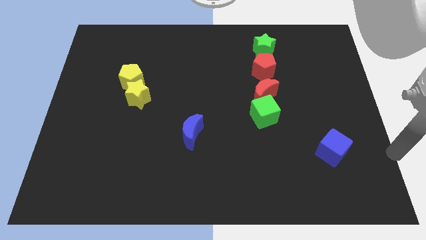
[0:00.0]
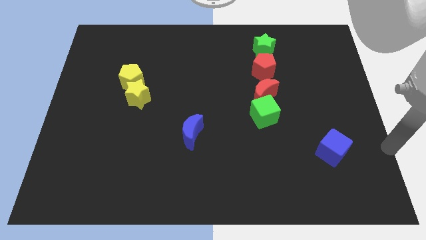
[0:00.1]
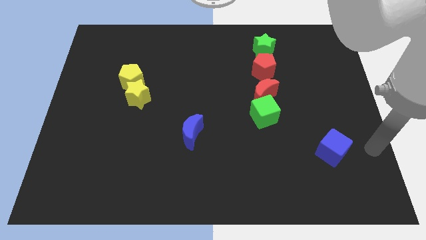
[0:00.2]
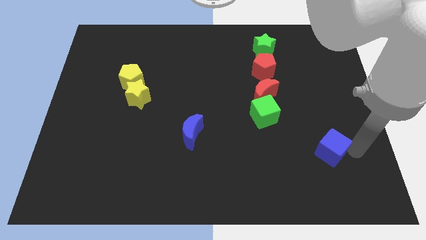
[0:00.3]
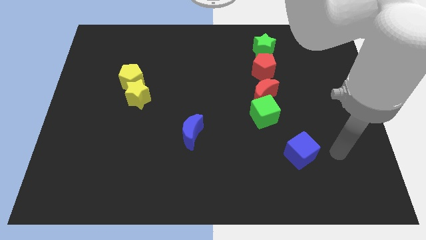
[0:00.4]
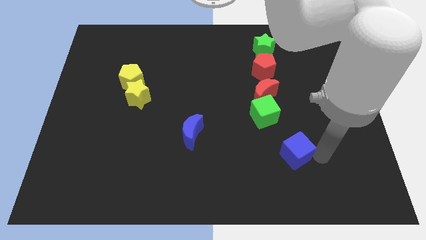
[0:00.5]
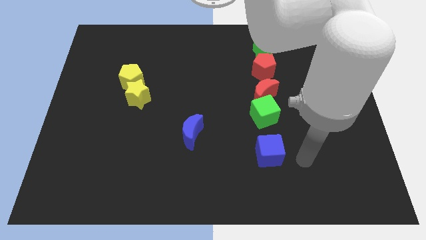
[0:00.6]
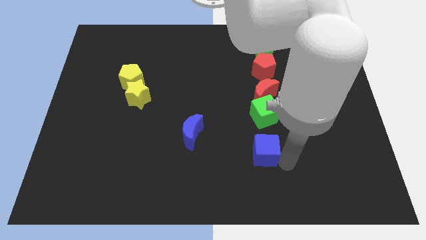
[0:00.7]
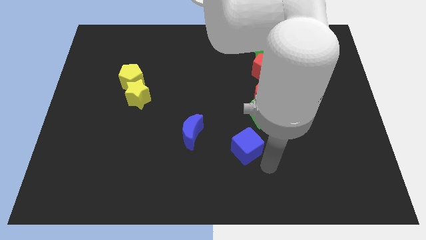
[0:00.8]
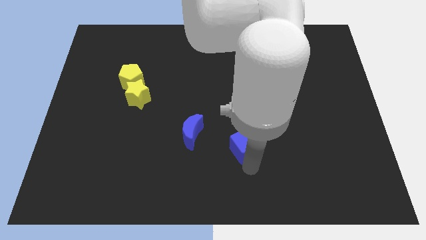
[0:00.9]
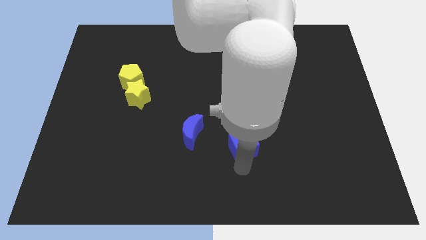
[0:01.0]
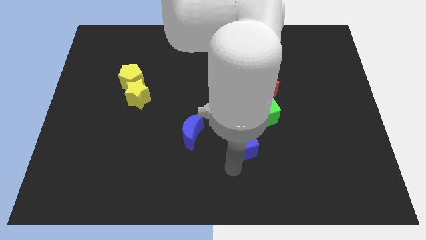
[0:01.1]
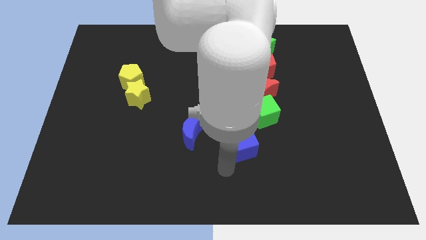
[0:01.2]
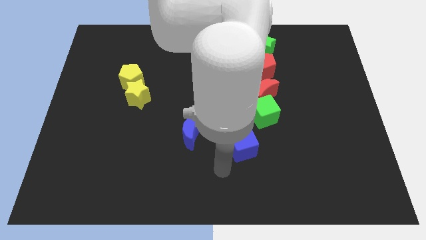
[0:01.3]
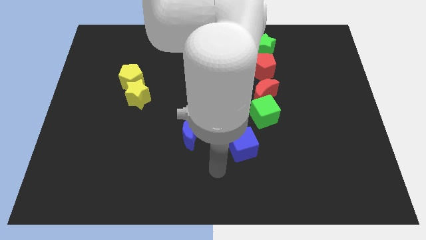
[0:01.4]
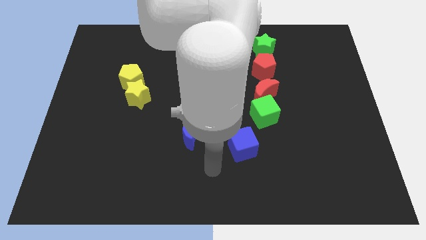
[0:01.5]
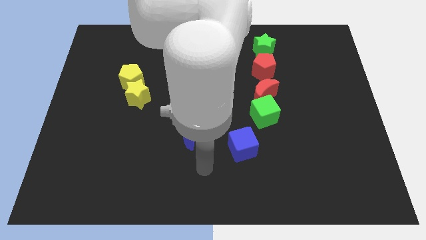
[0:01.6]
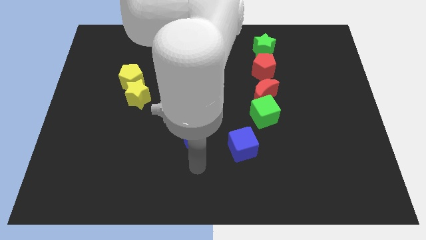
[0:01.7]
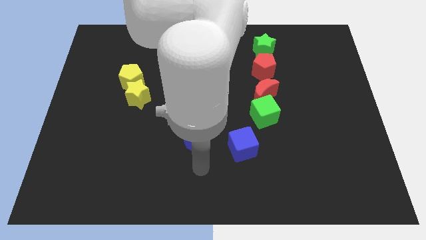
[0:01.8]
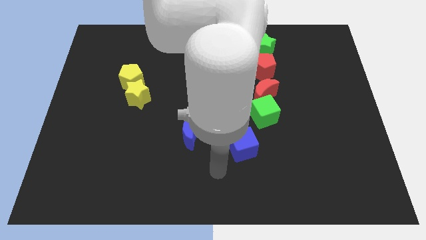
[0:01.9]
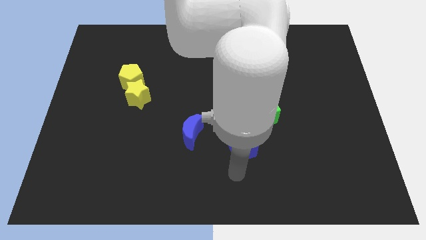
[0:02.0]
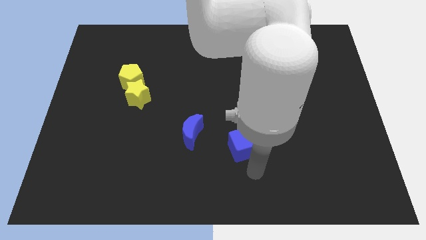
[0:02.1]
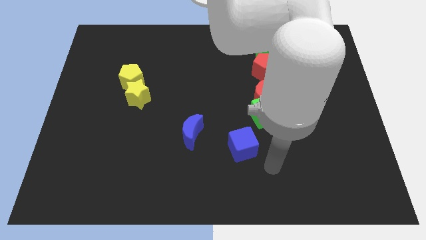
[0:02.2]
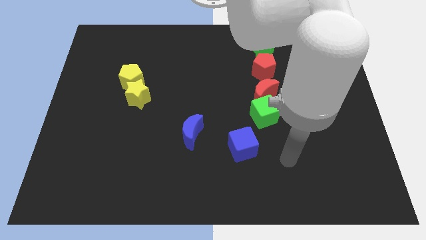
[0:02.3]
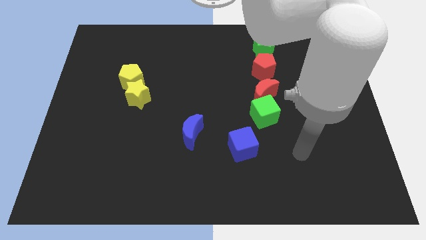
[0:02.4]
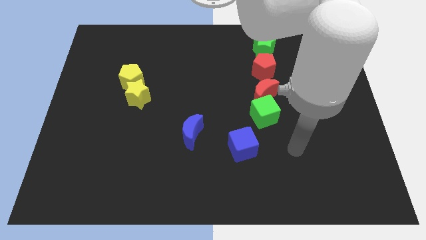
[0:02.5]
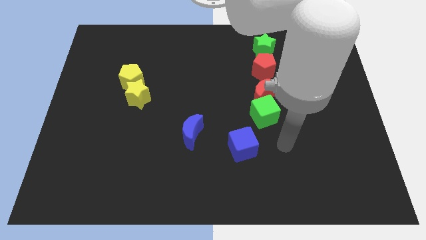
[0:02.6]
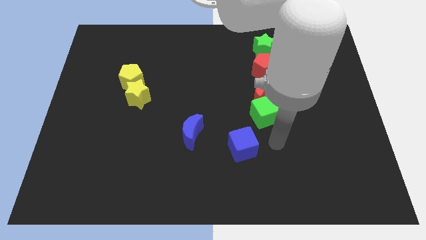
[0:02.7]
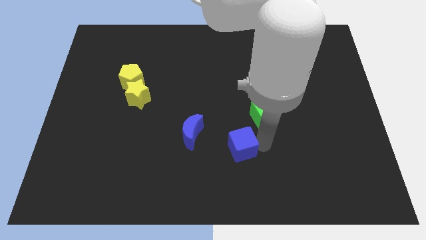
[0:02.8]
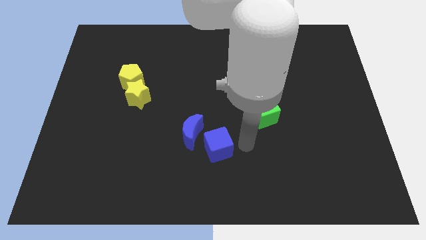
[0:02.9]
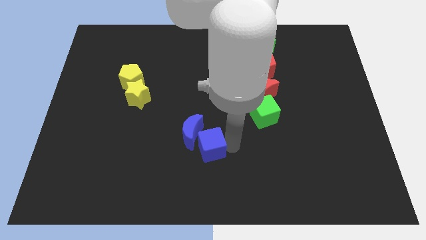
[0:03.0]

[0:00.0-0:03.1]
drag the blue cube into the blue moon

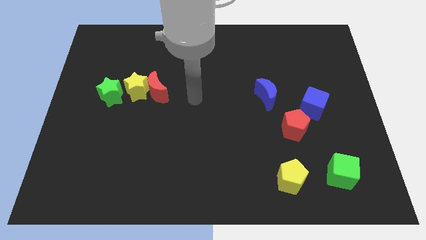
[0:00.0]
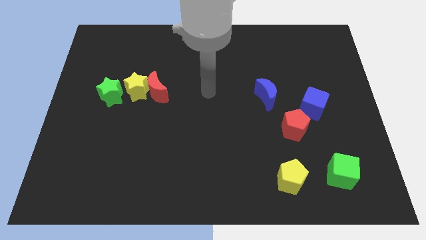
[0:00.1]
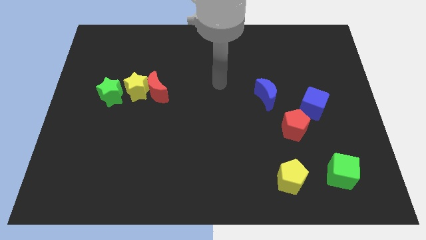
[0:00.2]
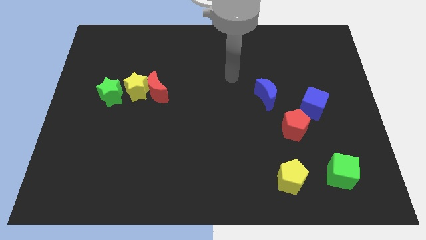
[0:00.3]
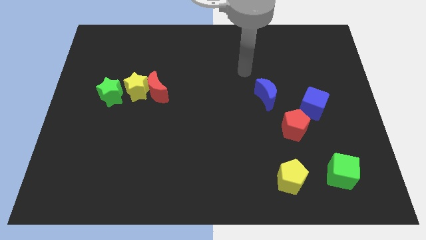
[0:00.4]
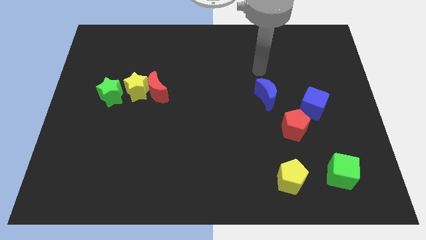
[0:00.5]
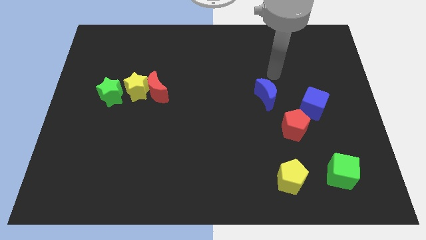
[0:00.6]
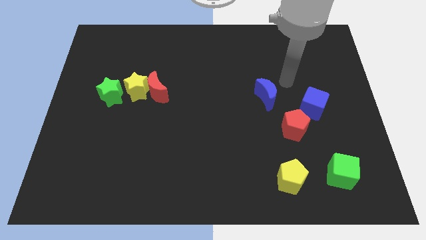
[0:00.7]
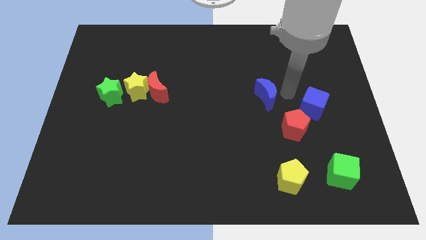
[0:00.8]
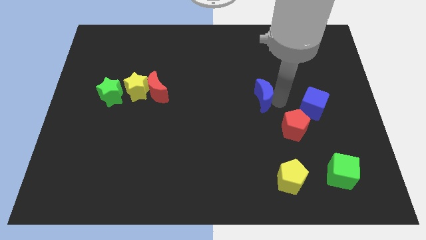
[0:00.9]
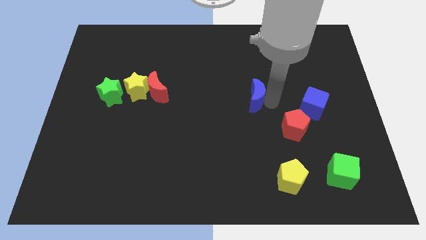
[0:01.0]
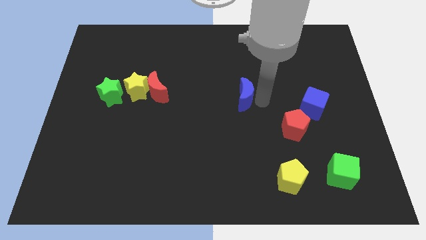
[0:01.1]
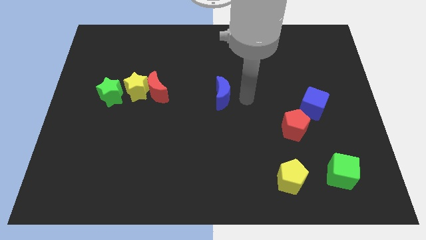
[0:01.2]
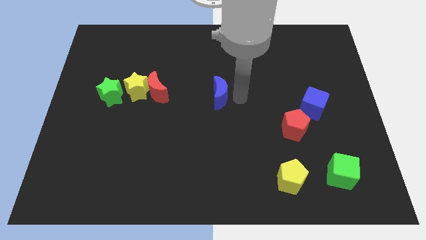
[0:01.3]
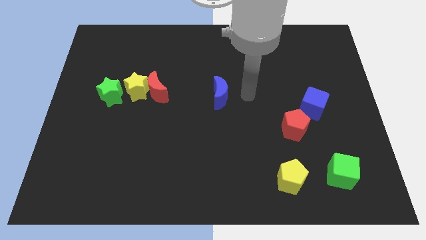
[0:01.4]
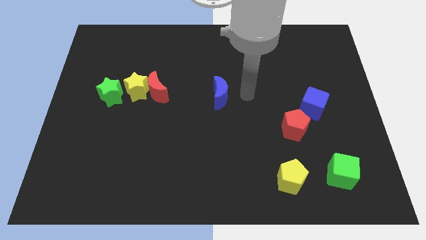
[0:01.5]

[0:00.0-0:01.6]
move the blue moon towards the red moon

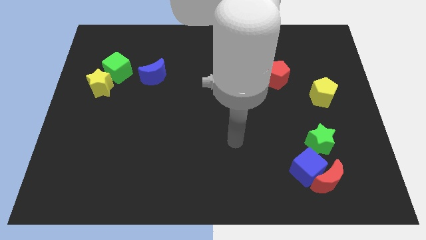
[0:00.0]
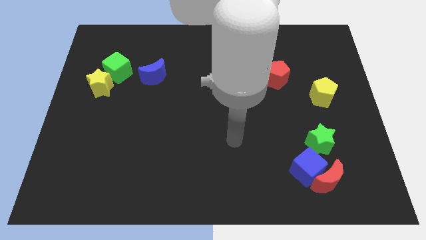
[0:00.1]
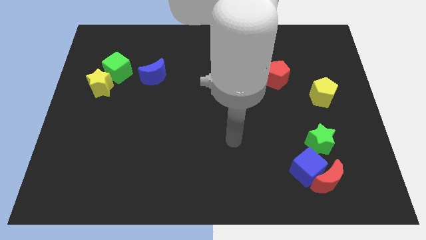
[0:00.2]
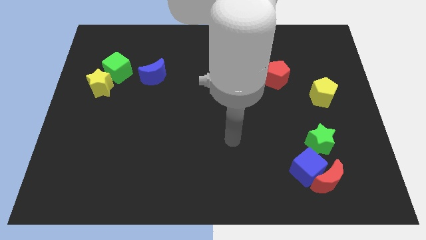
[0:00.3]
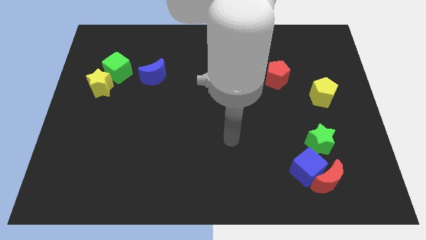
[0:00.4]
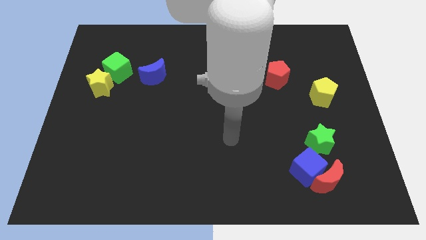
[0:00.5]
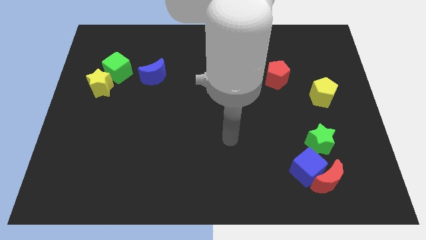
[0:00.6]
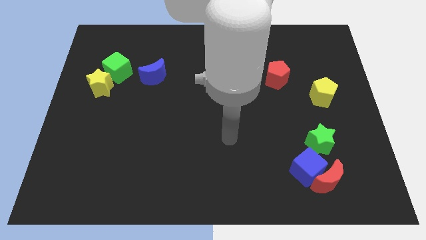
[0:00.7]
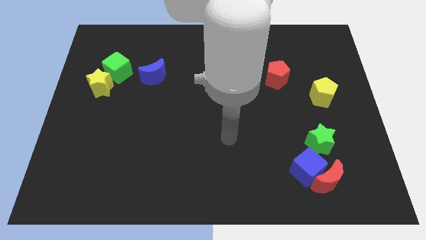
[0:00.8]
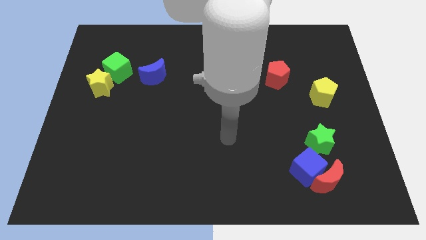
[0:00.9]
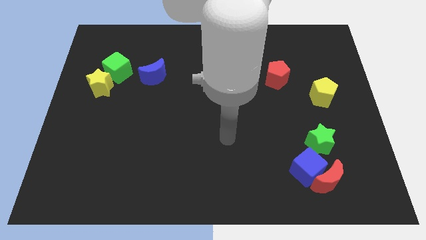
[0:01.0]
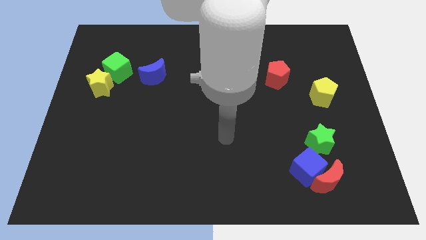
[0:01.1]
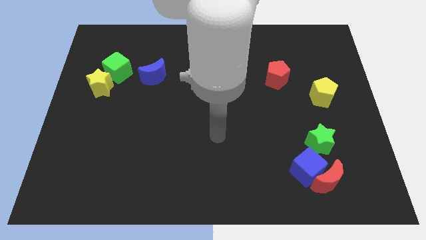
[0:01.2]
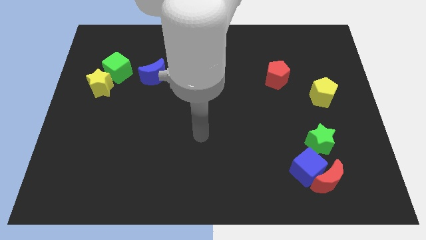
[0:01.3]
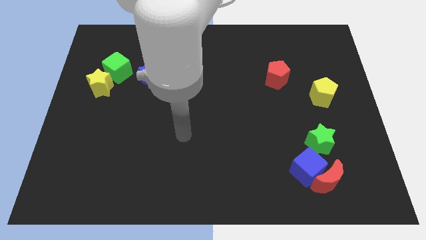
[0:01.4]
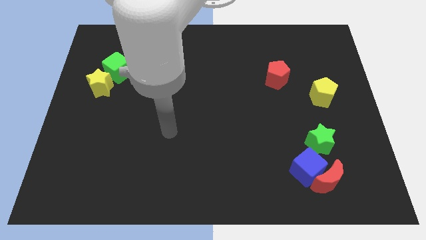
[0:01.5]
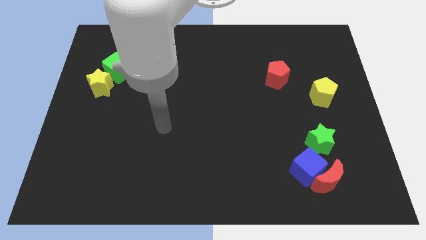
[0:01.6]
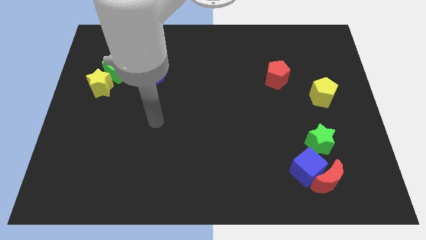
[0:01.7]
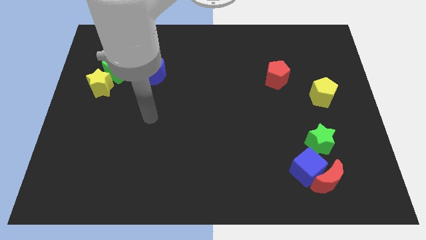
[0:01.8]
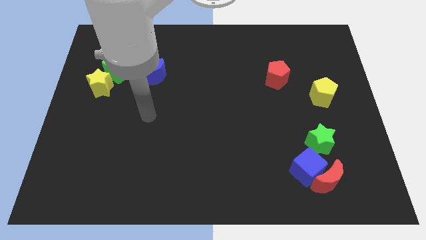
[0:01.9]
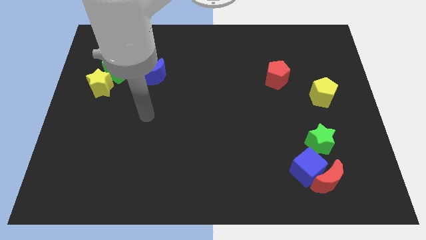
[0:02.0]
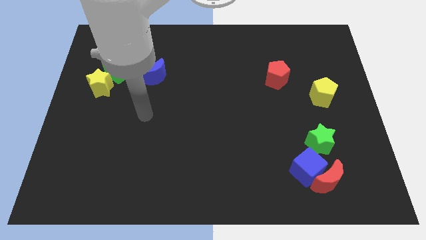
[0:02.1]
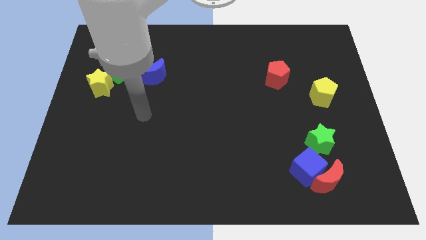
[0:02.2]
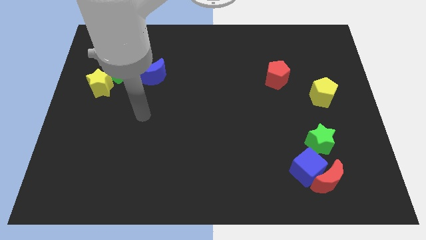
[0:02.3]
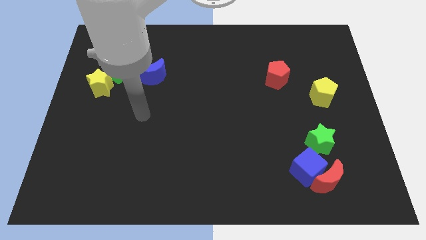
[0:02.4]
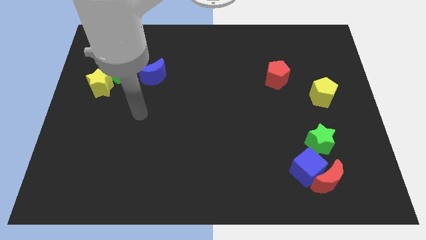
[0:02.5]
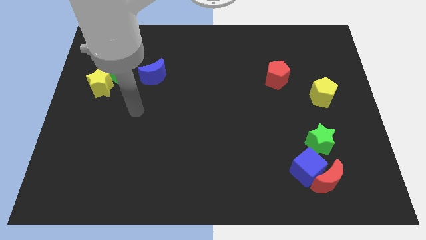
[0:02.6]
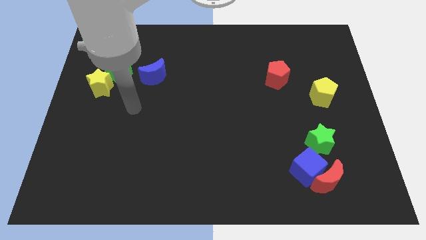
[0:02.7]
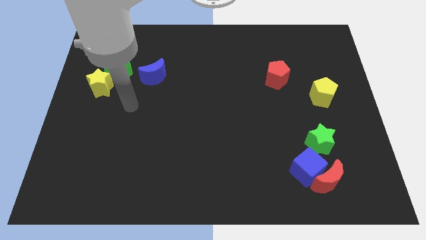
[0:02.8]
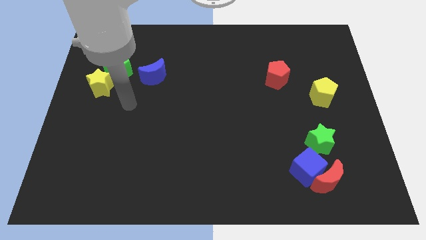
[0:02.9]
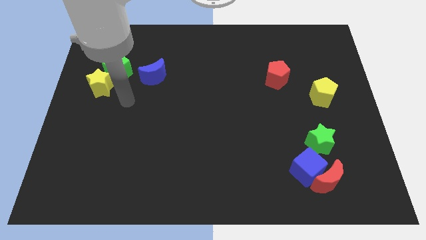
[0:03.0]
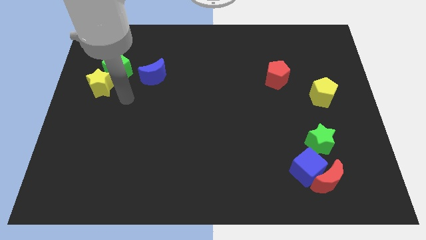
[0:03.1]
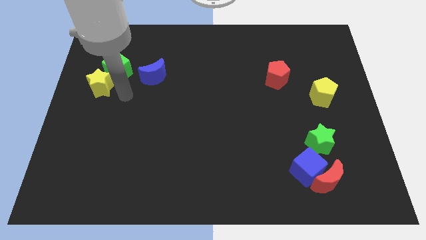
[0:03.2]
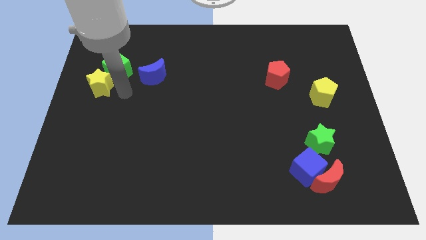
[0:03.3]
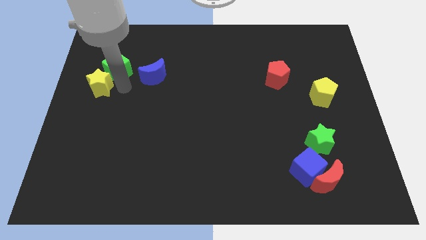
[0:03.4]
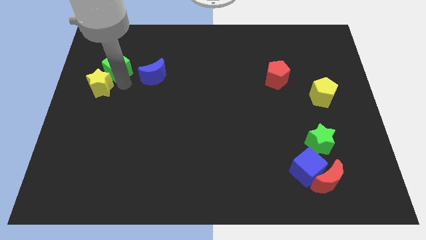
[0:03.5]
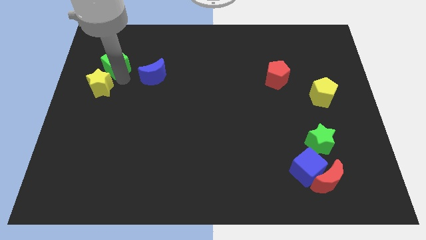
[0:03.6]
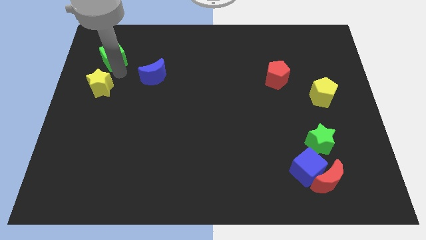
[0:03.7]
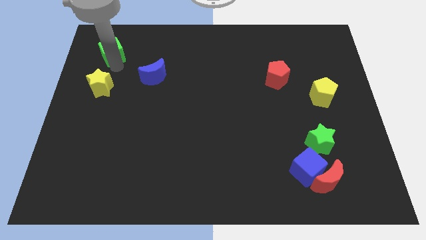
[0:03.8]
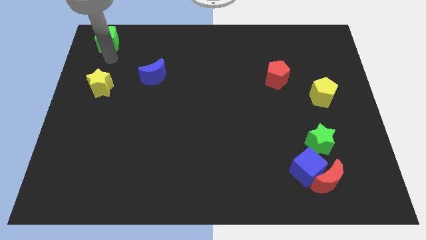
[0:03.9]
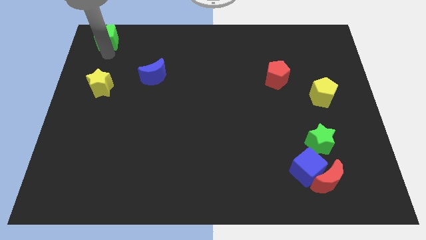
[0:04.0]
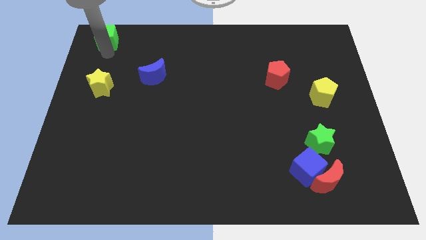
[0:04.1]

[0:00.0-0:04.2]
separate the green cube from the yellow star

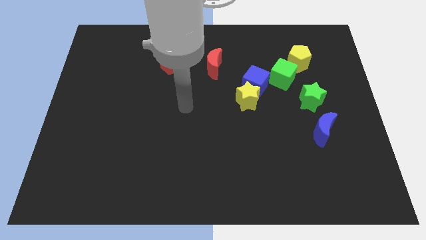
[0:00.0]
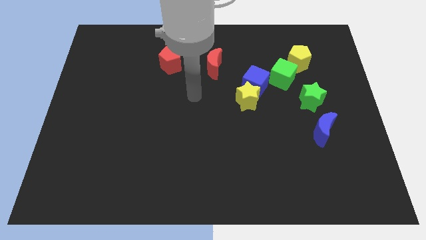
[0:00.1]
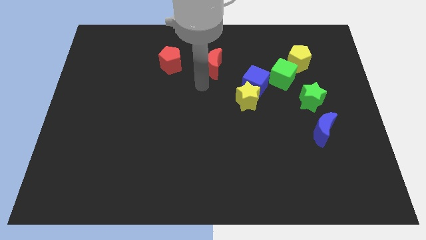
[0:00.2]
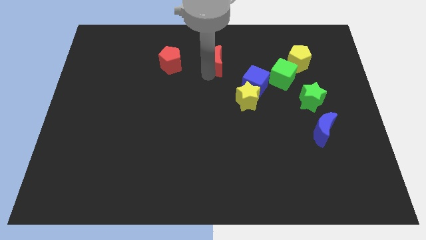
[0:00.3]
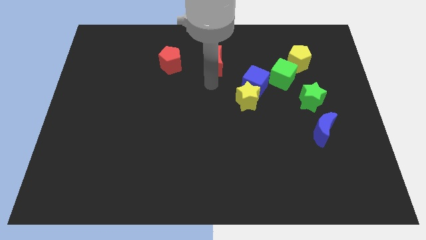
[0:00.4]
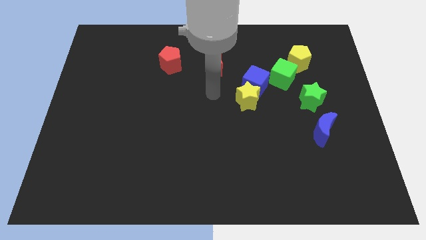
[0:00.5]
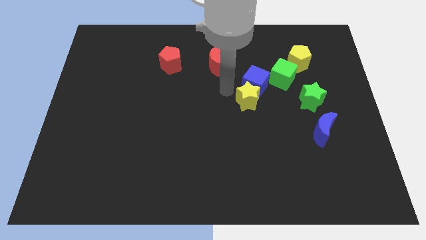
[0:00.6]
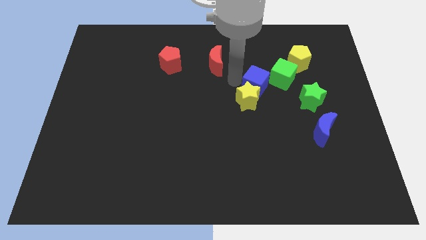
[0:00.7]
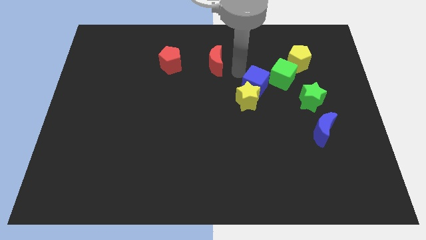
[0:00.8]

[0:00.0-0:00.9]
place your arm to the left of the blue cube
